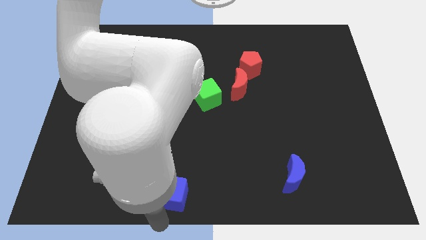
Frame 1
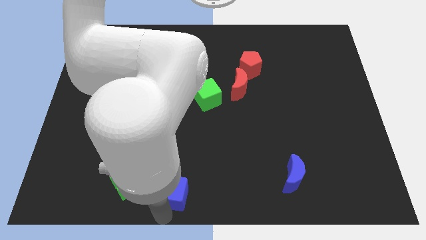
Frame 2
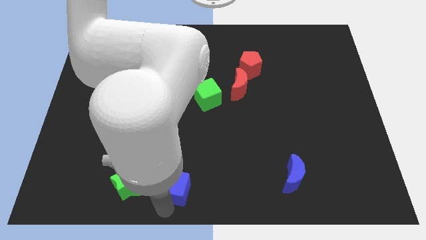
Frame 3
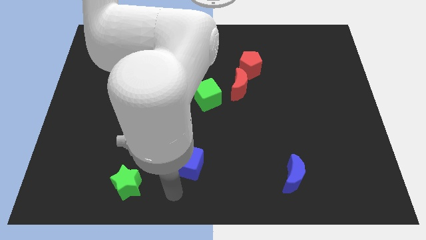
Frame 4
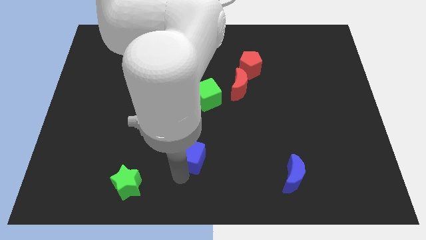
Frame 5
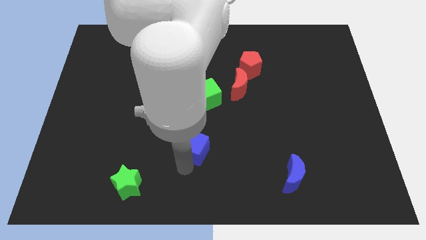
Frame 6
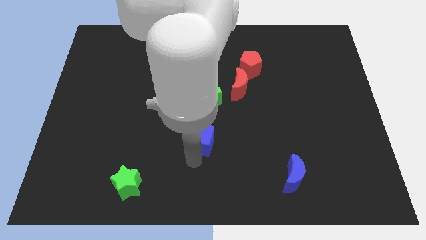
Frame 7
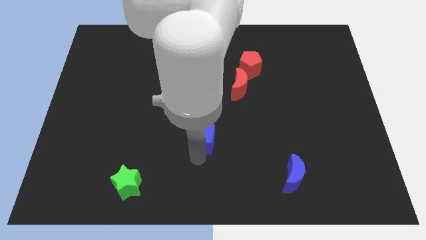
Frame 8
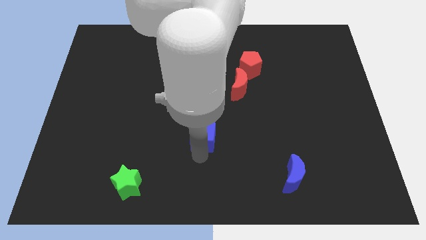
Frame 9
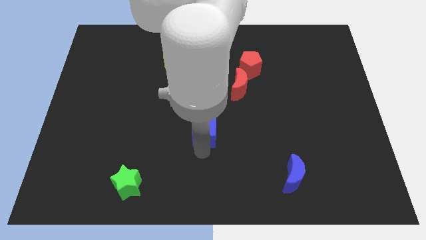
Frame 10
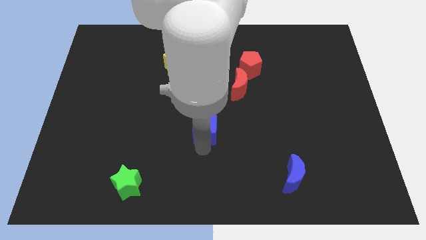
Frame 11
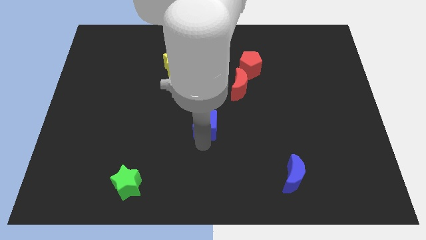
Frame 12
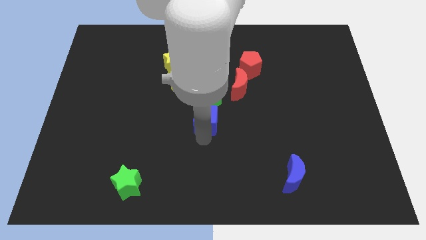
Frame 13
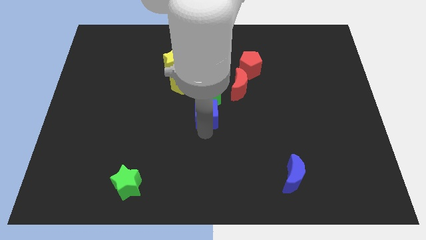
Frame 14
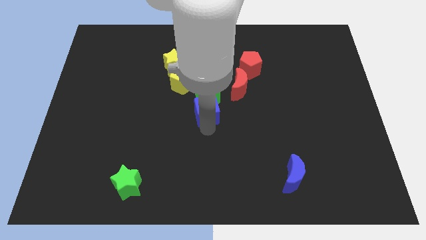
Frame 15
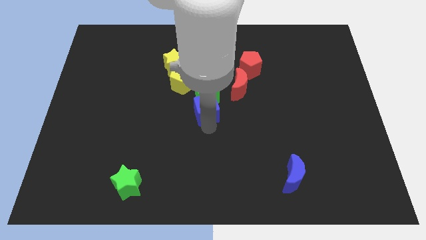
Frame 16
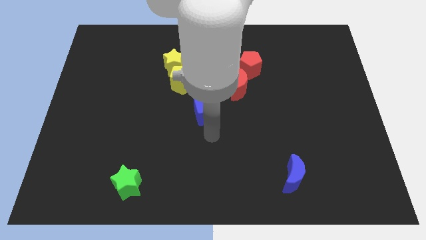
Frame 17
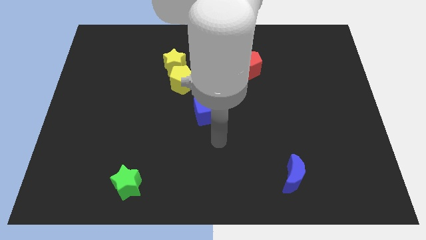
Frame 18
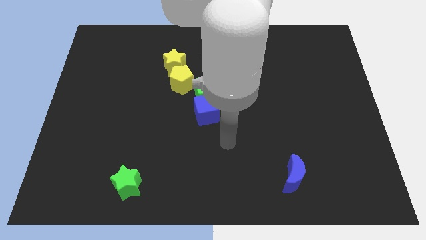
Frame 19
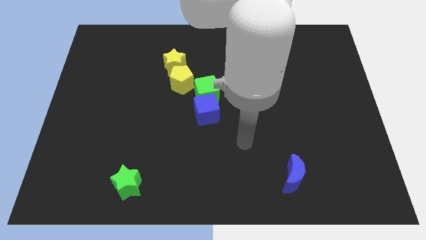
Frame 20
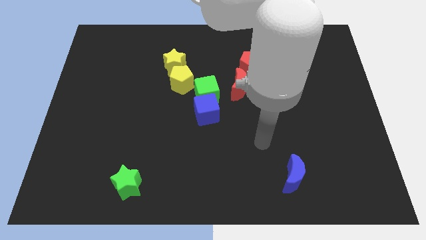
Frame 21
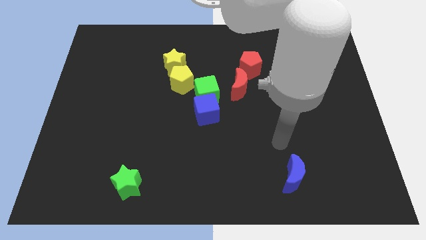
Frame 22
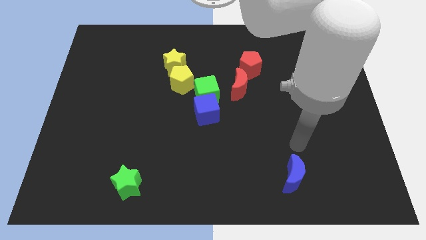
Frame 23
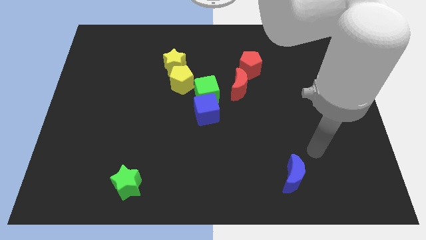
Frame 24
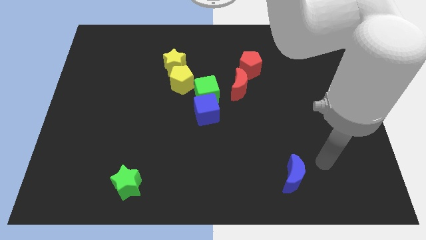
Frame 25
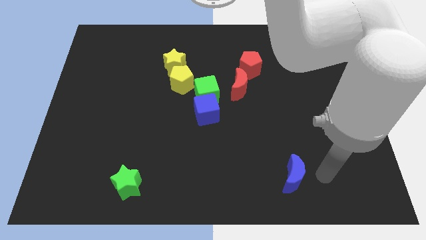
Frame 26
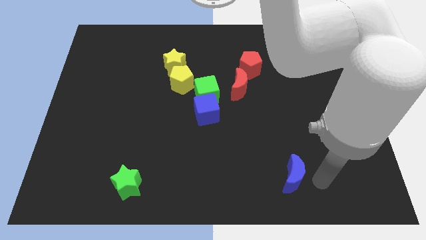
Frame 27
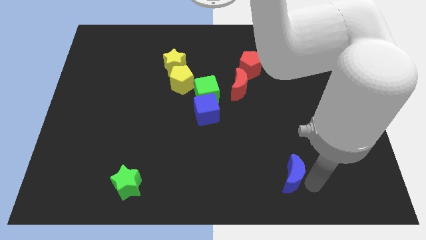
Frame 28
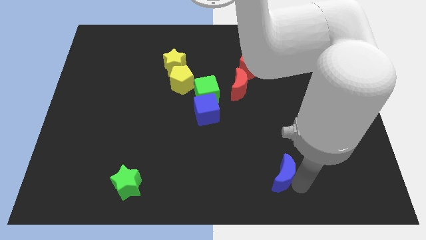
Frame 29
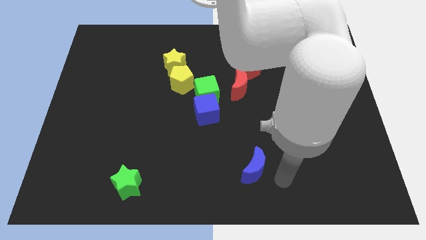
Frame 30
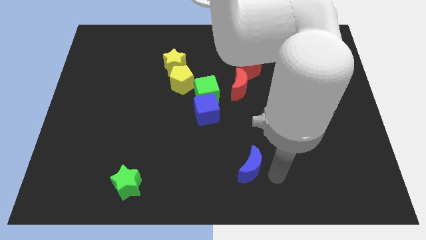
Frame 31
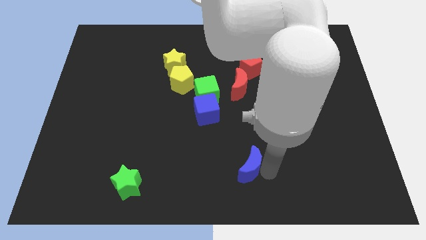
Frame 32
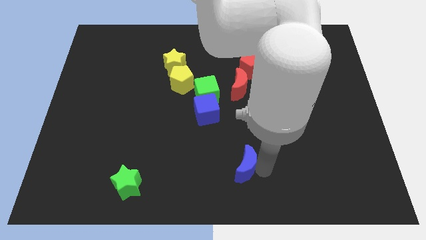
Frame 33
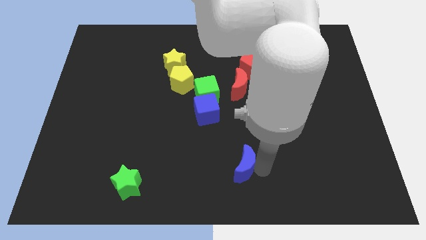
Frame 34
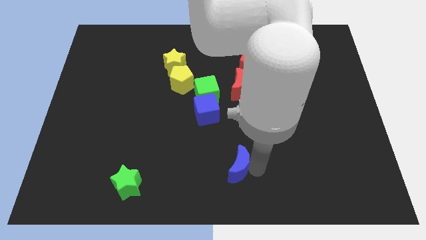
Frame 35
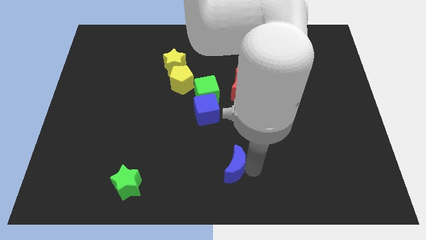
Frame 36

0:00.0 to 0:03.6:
slide the blue moon towards the top left of the board

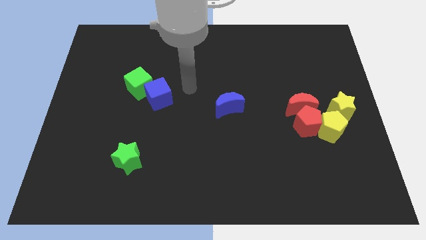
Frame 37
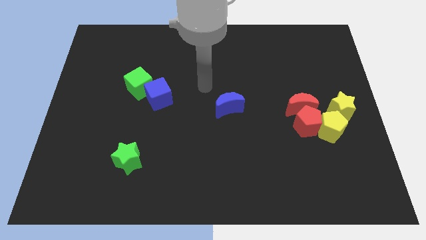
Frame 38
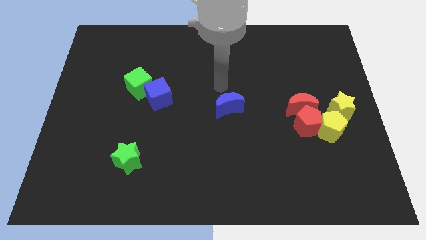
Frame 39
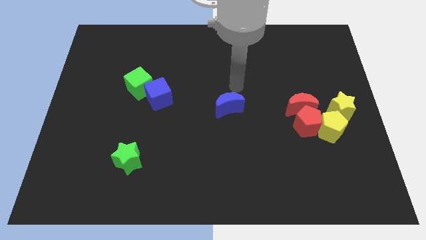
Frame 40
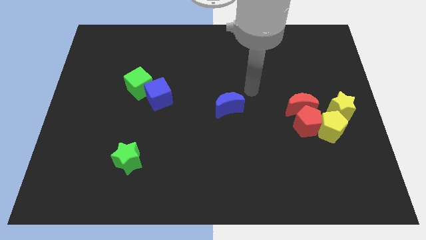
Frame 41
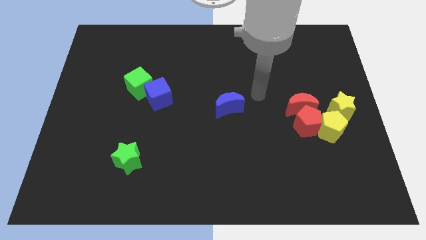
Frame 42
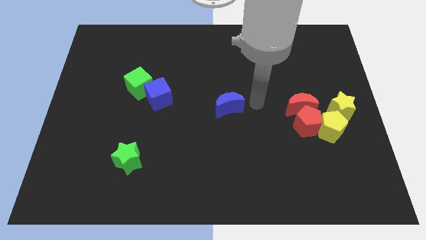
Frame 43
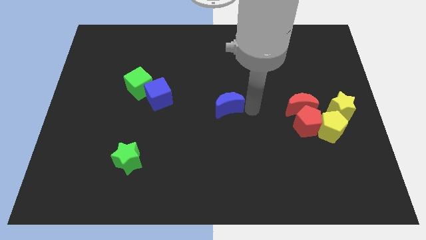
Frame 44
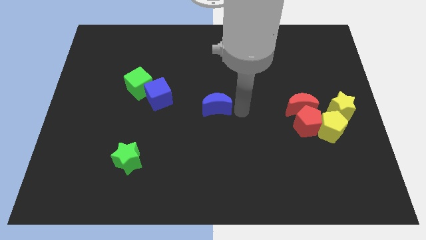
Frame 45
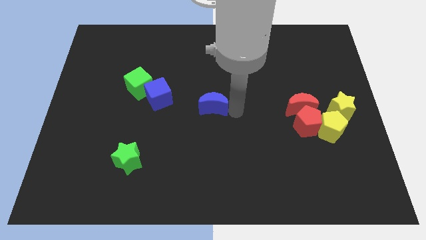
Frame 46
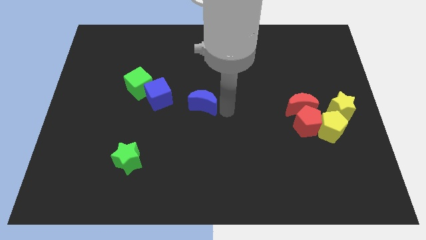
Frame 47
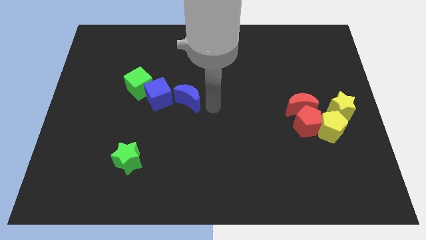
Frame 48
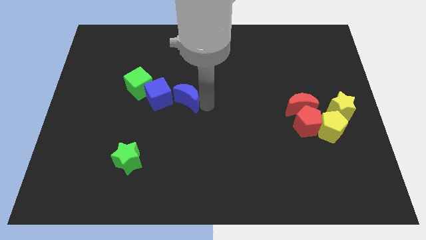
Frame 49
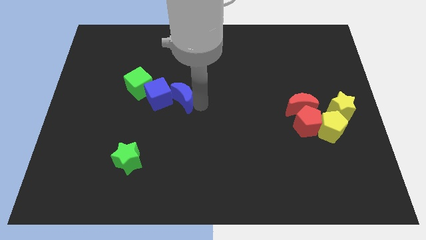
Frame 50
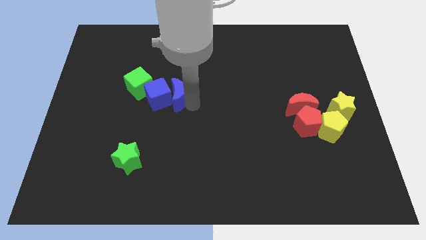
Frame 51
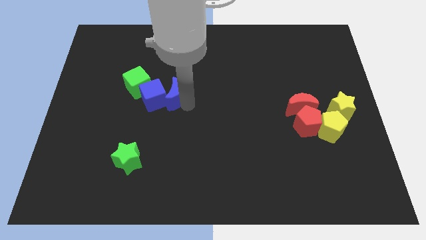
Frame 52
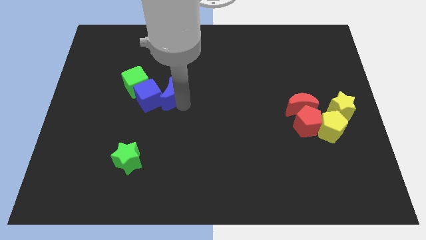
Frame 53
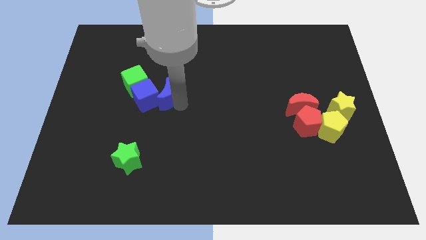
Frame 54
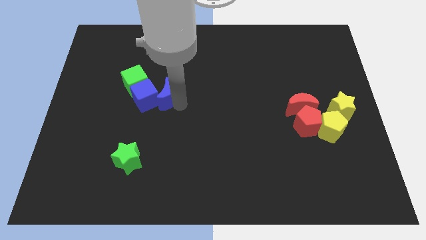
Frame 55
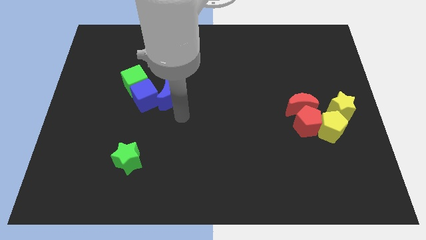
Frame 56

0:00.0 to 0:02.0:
place the blue crescent to the right of the blue cube

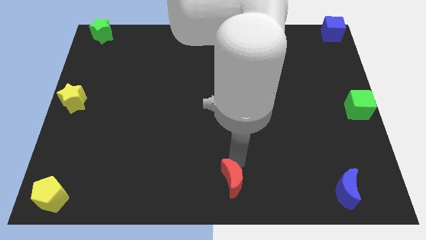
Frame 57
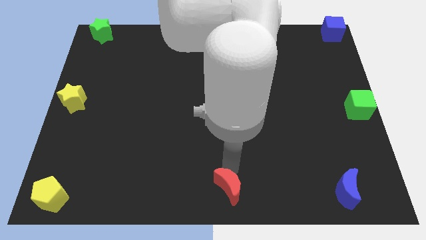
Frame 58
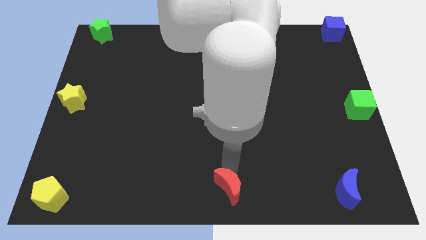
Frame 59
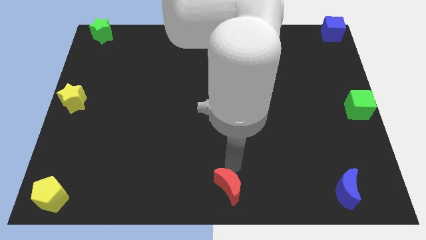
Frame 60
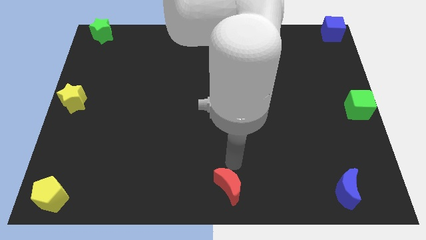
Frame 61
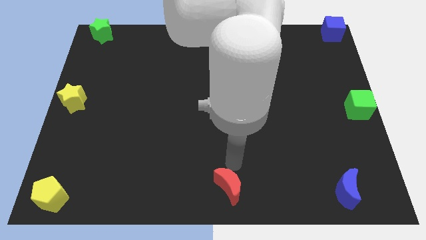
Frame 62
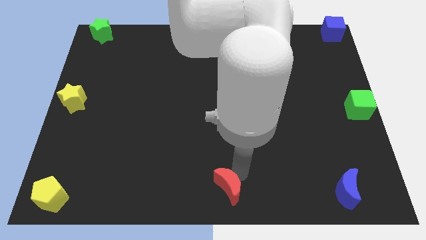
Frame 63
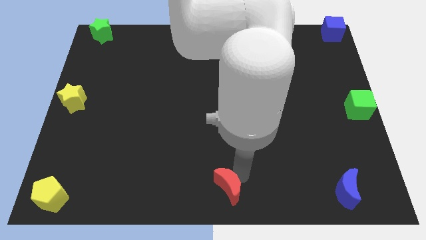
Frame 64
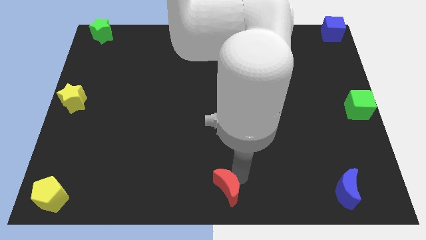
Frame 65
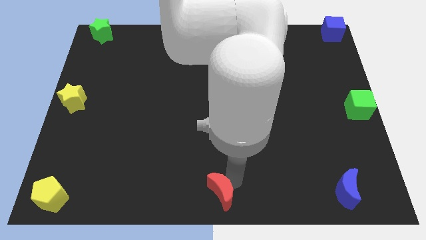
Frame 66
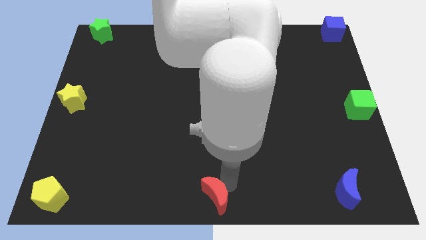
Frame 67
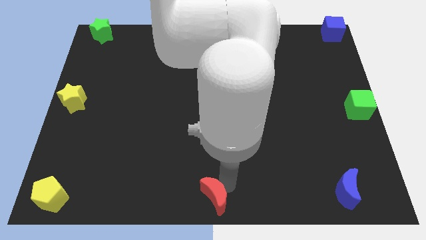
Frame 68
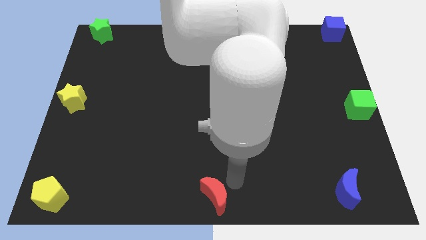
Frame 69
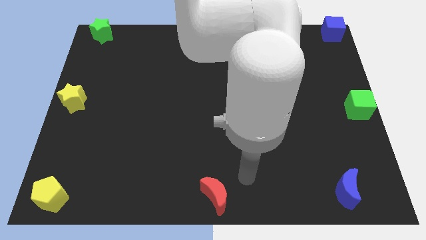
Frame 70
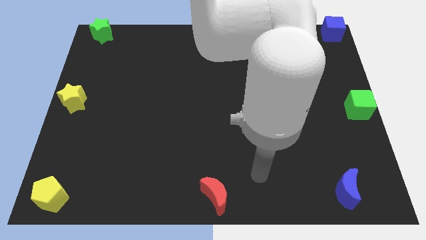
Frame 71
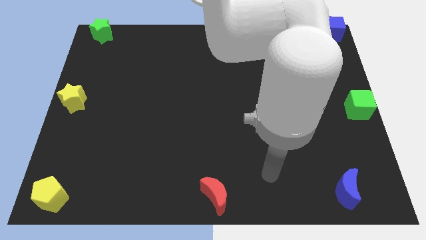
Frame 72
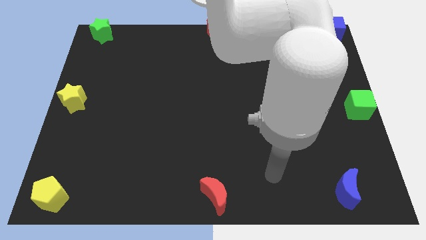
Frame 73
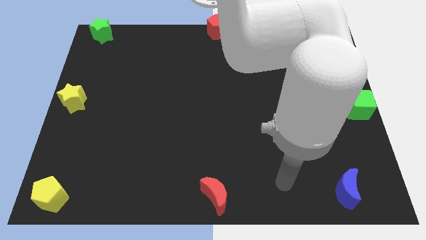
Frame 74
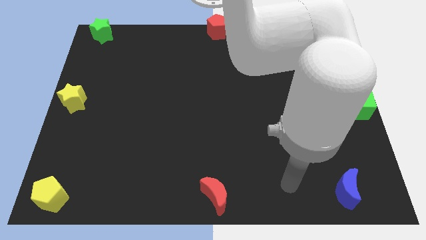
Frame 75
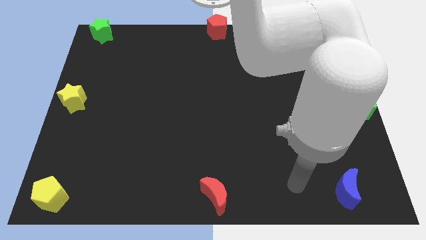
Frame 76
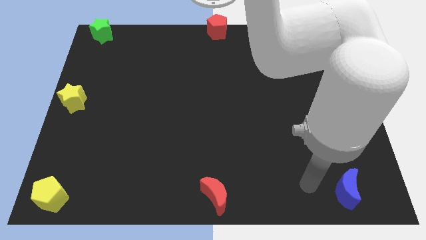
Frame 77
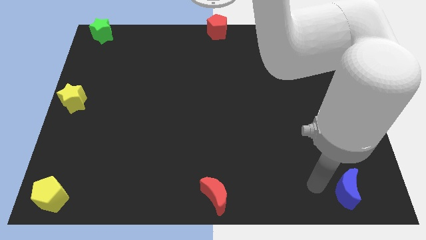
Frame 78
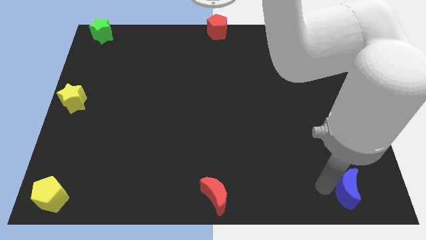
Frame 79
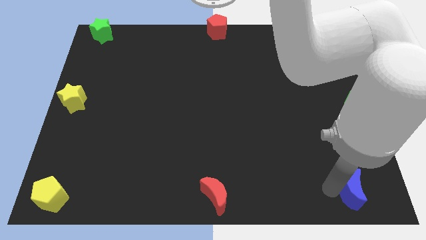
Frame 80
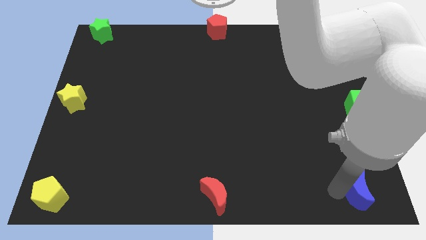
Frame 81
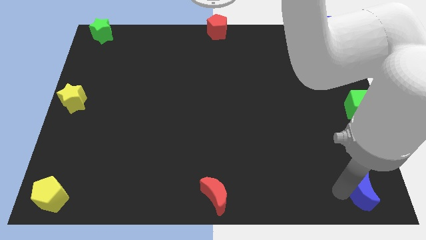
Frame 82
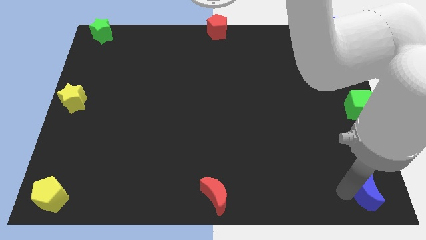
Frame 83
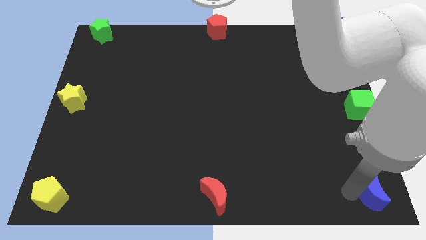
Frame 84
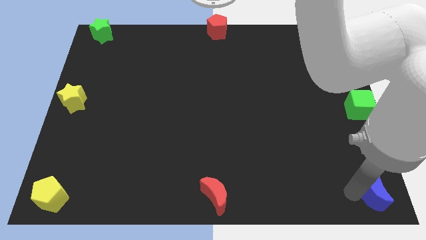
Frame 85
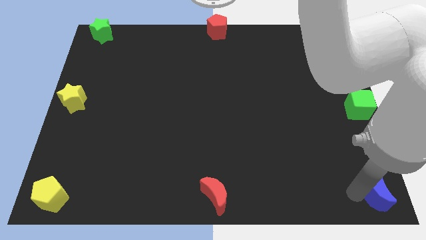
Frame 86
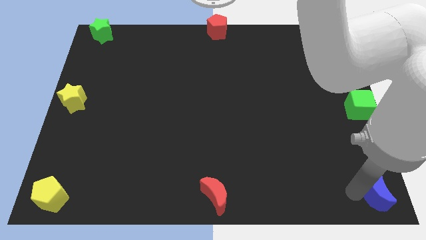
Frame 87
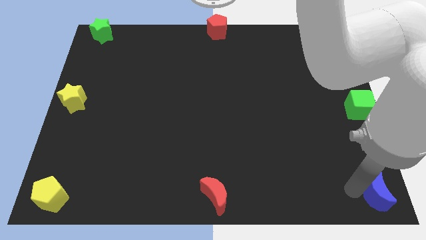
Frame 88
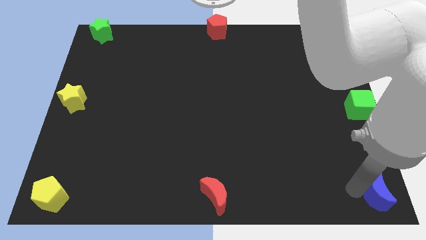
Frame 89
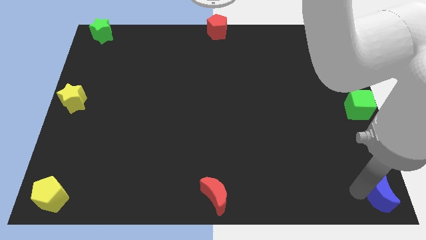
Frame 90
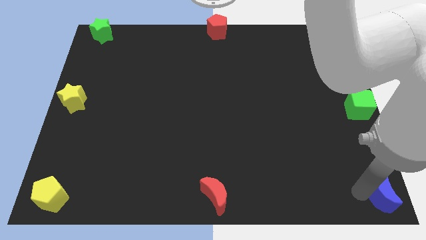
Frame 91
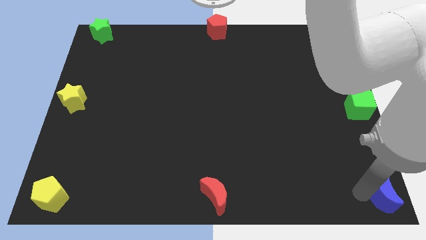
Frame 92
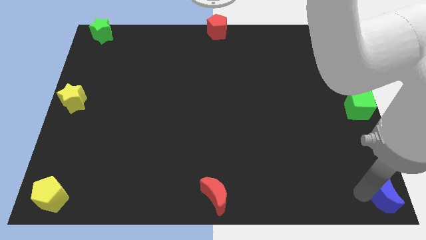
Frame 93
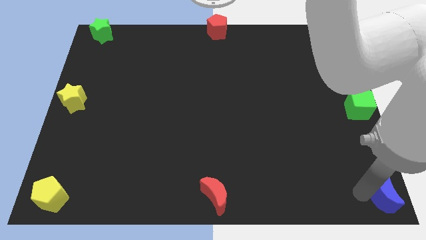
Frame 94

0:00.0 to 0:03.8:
push the blue crescent to the bottom right of the board
